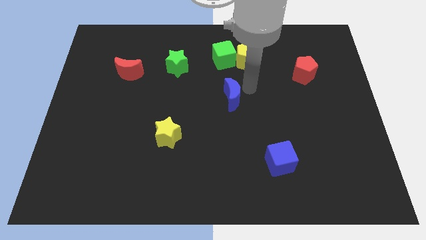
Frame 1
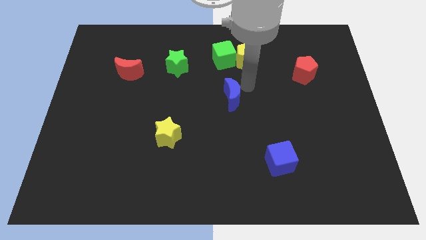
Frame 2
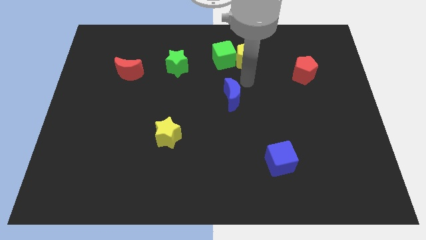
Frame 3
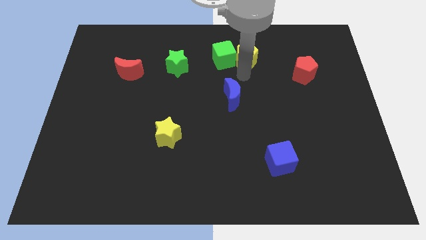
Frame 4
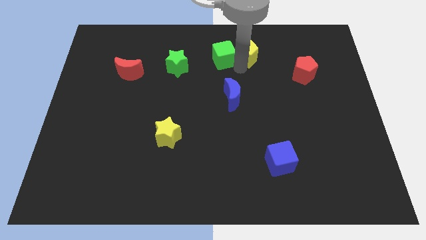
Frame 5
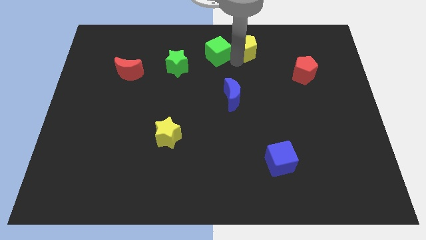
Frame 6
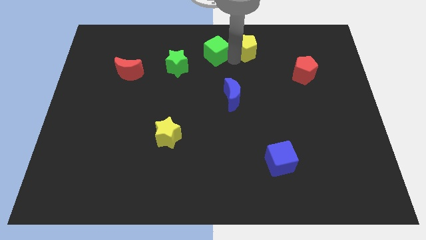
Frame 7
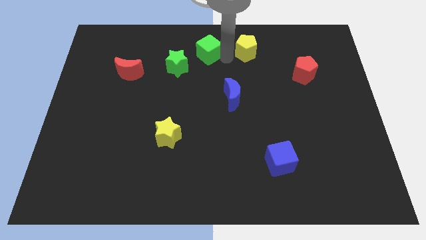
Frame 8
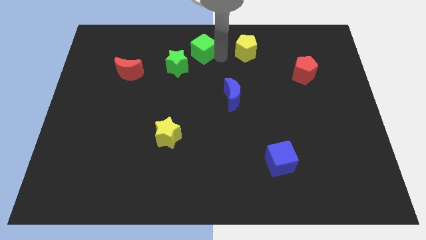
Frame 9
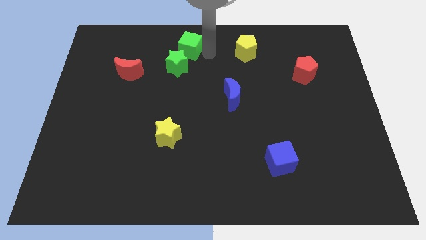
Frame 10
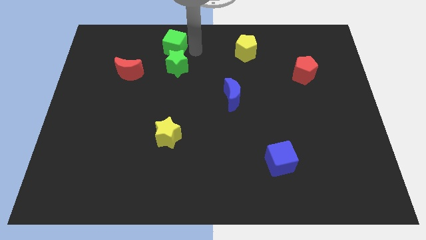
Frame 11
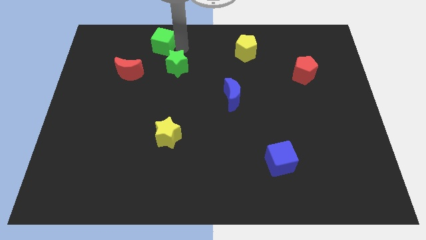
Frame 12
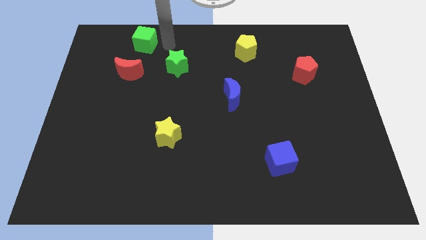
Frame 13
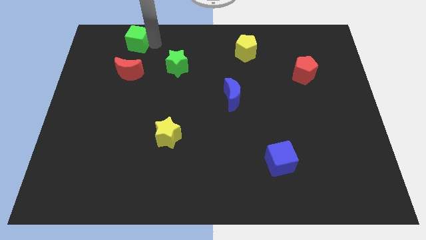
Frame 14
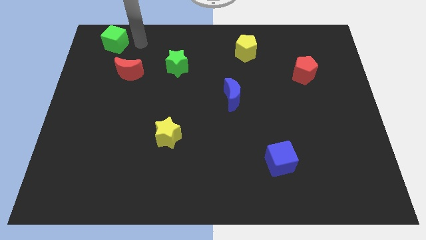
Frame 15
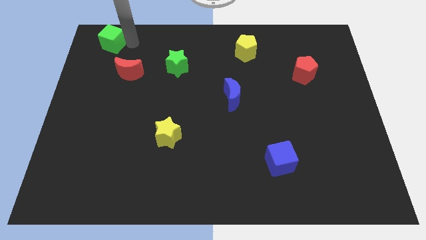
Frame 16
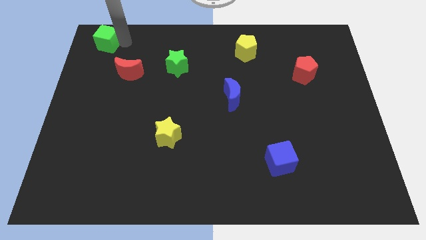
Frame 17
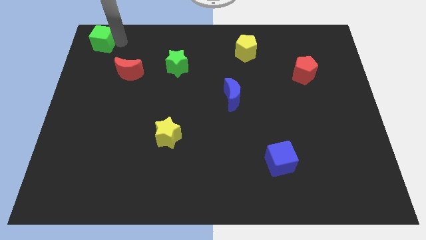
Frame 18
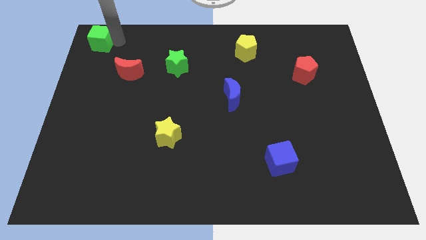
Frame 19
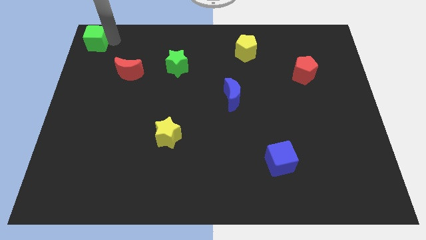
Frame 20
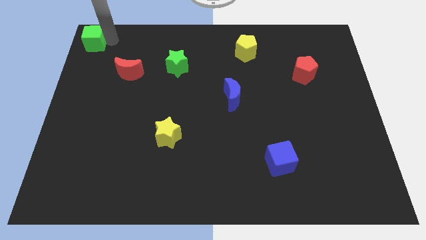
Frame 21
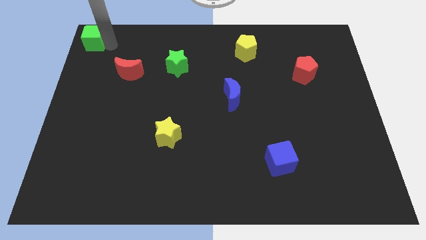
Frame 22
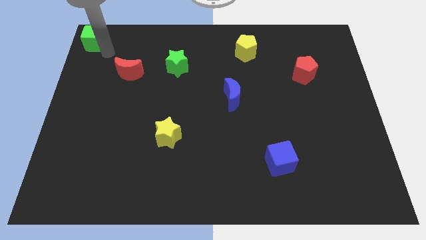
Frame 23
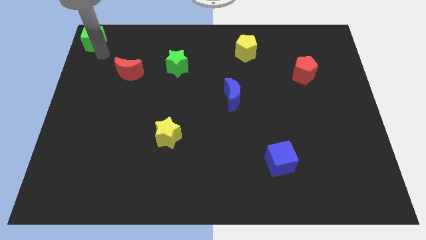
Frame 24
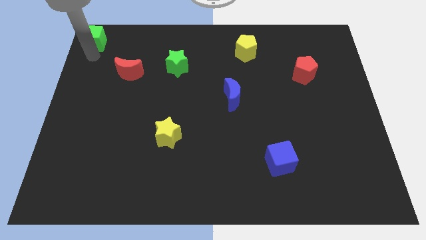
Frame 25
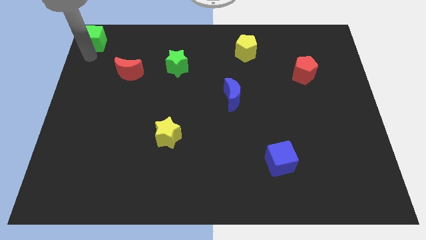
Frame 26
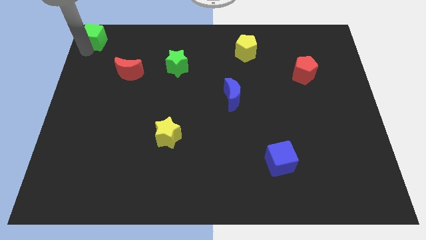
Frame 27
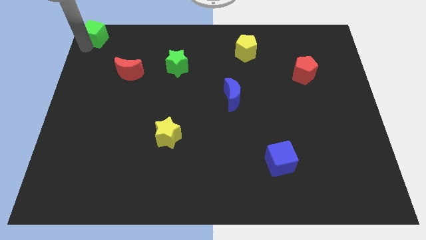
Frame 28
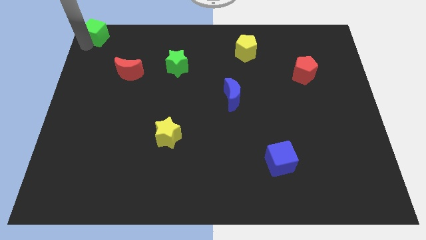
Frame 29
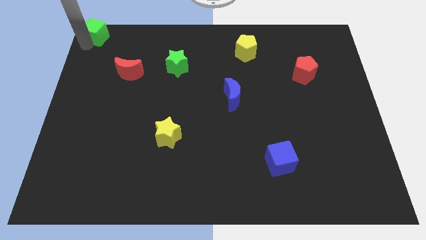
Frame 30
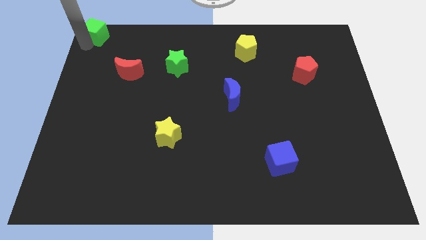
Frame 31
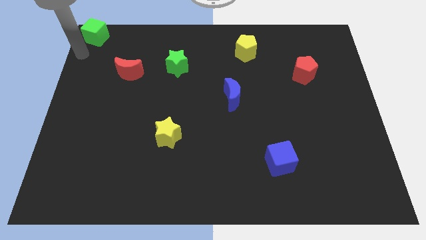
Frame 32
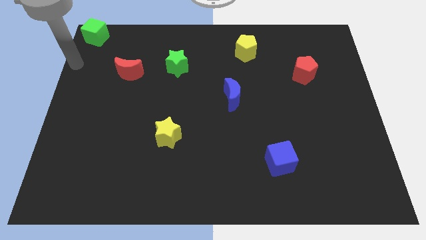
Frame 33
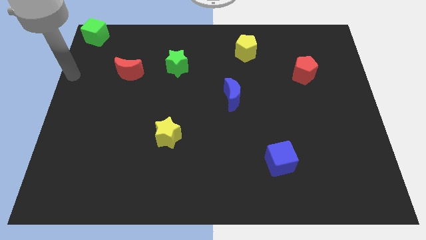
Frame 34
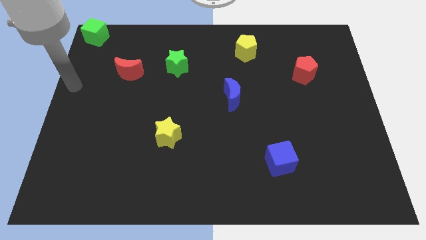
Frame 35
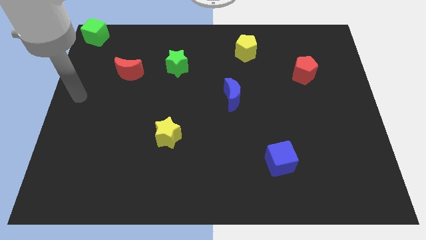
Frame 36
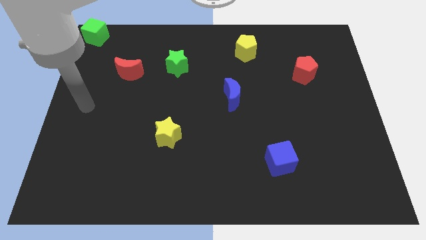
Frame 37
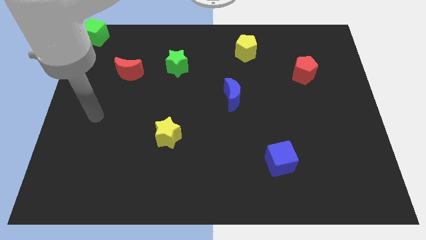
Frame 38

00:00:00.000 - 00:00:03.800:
move green cube to the top left corner

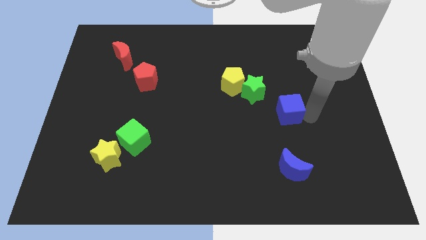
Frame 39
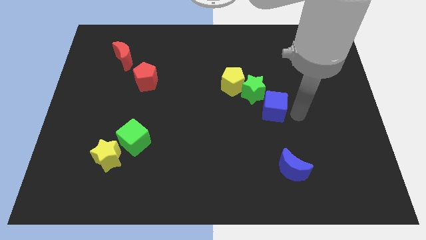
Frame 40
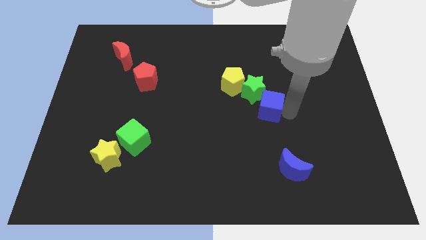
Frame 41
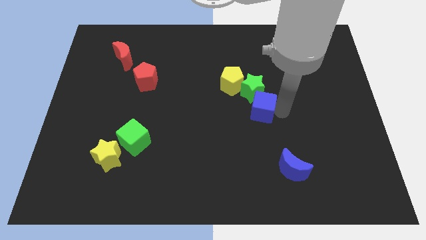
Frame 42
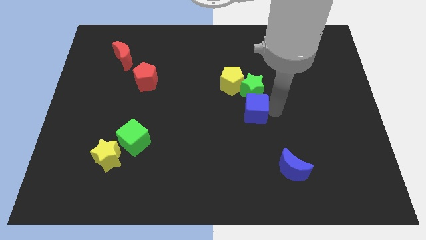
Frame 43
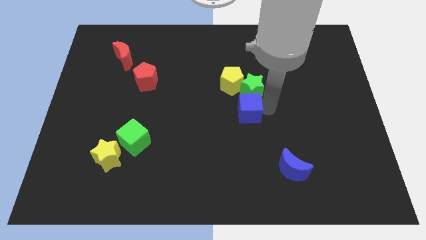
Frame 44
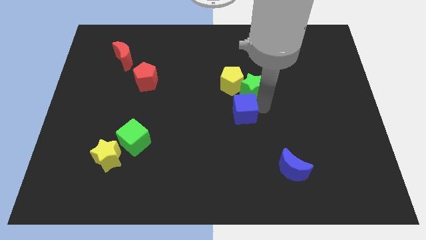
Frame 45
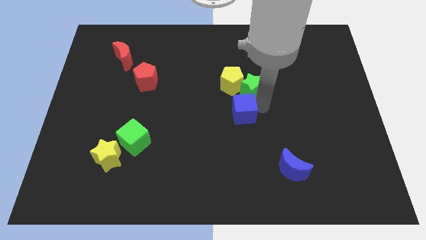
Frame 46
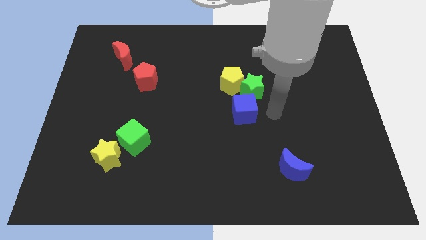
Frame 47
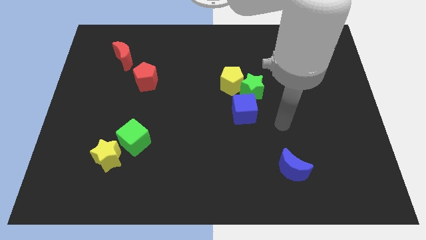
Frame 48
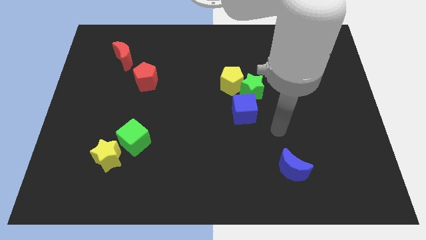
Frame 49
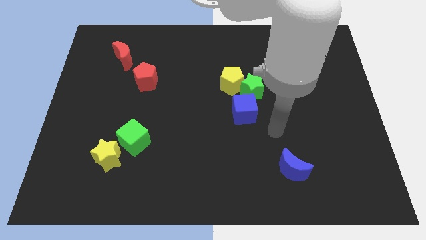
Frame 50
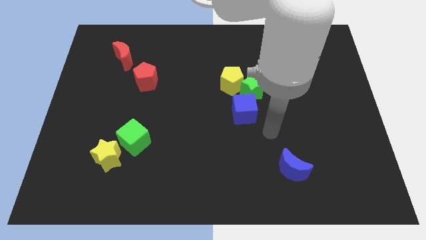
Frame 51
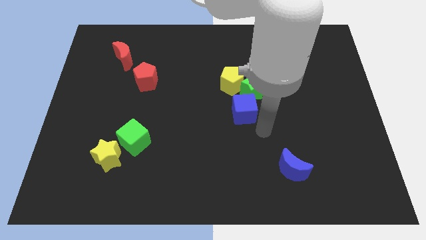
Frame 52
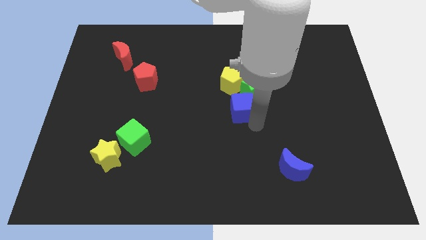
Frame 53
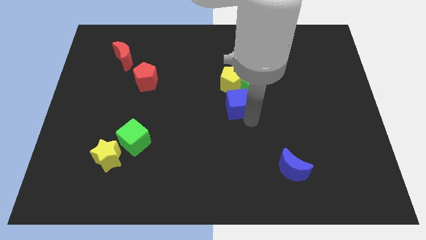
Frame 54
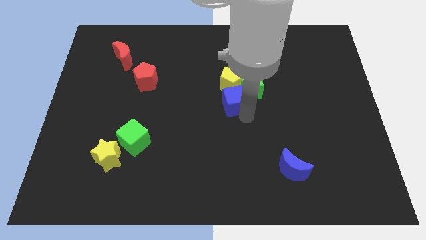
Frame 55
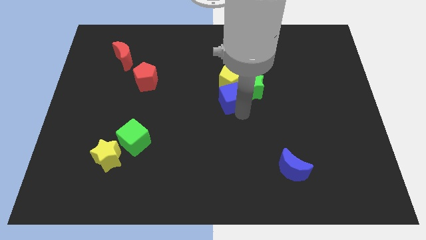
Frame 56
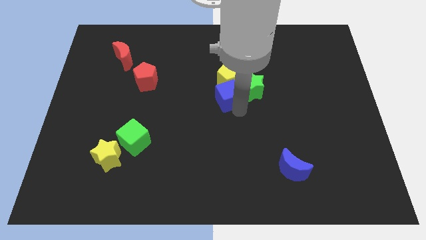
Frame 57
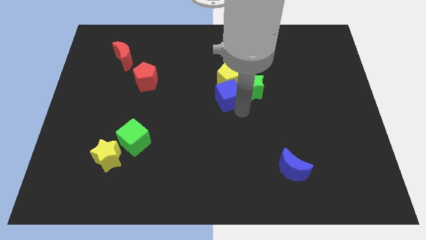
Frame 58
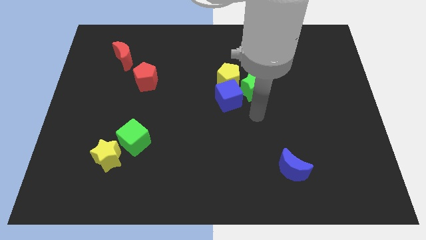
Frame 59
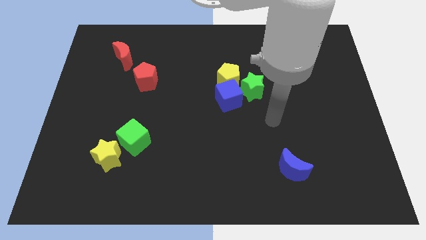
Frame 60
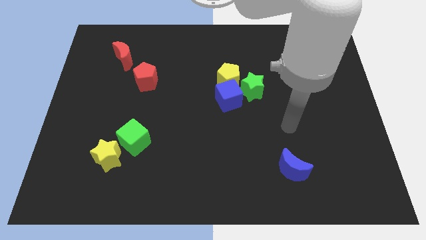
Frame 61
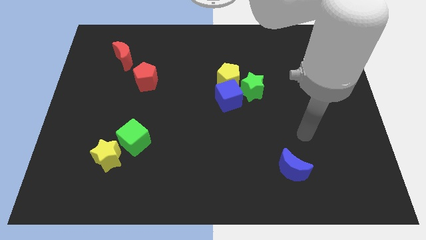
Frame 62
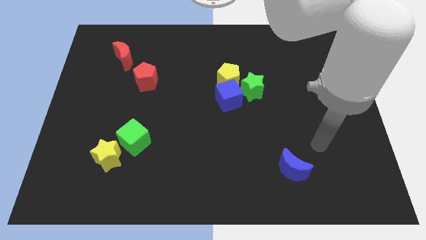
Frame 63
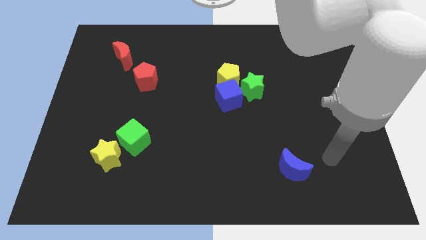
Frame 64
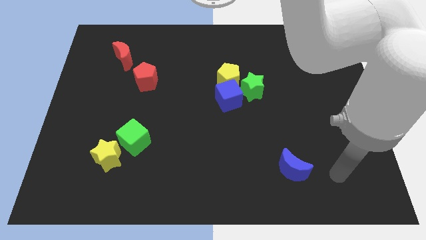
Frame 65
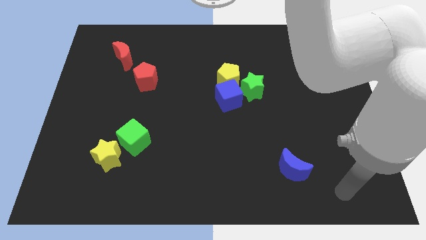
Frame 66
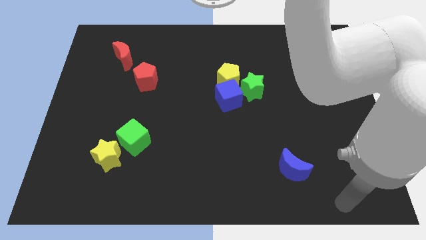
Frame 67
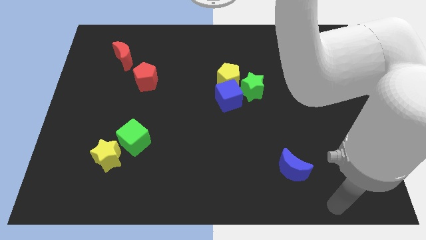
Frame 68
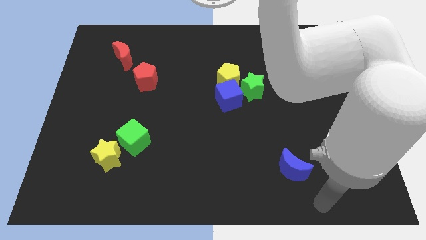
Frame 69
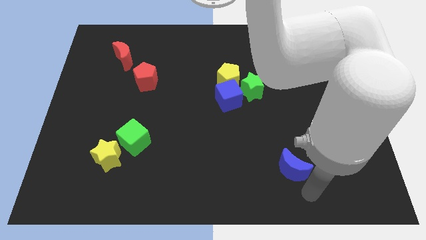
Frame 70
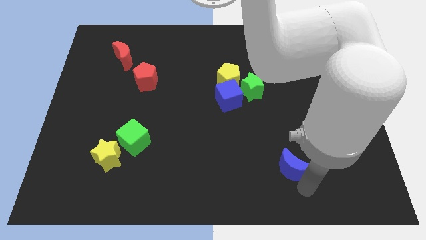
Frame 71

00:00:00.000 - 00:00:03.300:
move the blue cube into the yellow pentagon

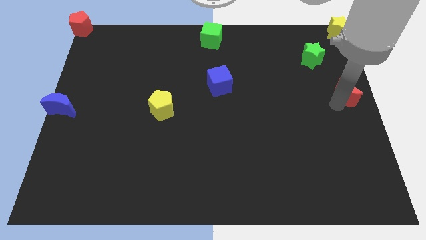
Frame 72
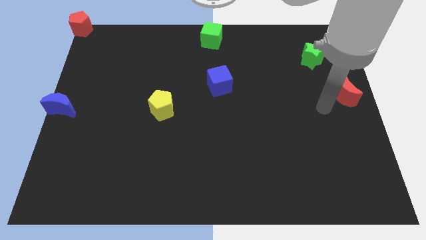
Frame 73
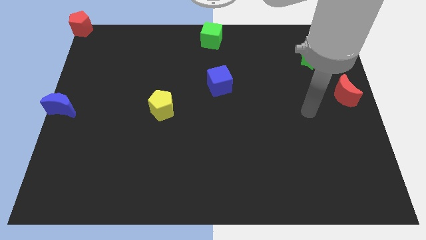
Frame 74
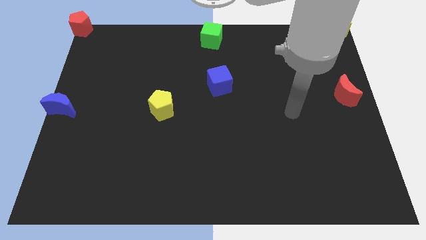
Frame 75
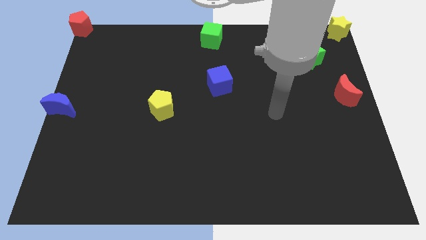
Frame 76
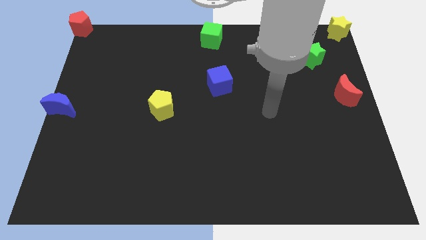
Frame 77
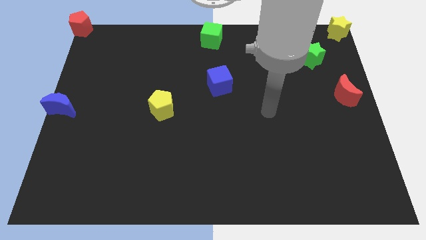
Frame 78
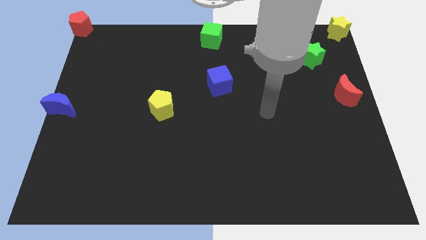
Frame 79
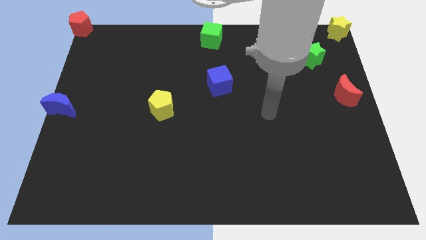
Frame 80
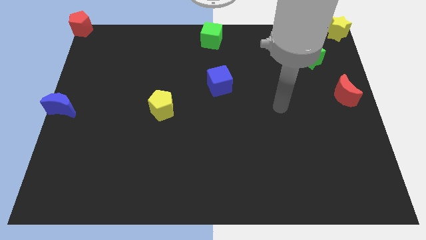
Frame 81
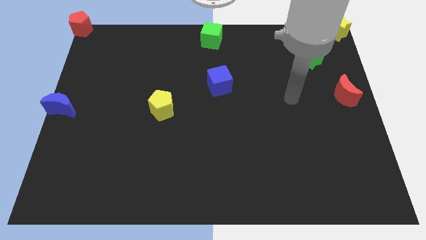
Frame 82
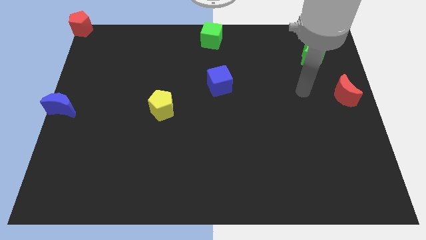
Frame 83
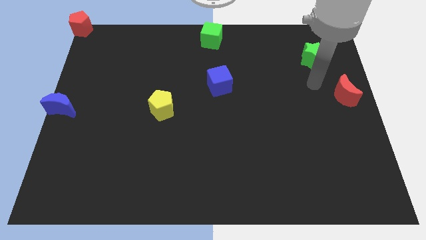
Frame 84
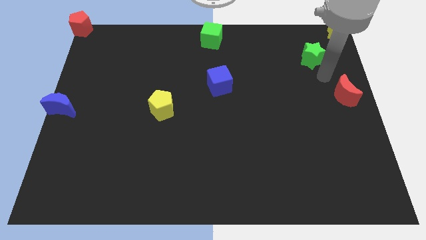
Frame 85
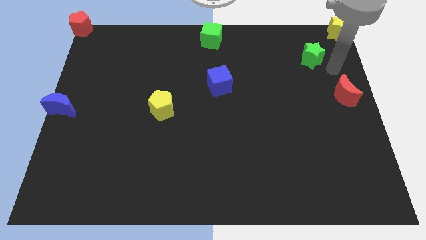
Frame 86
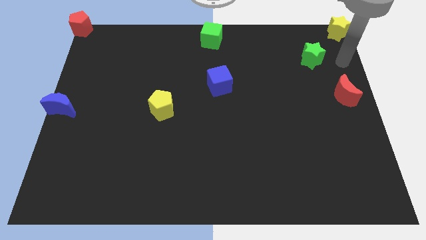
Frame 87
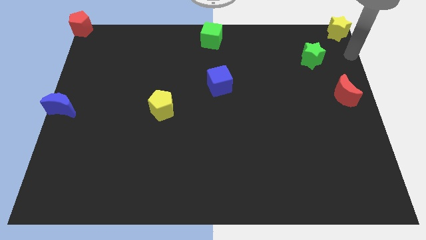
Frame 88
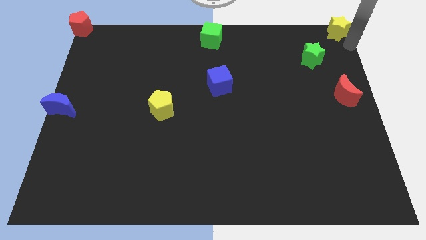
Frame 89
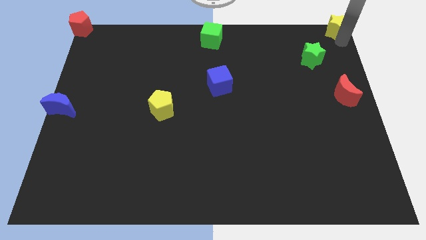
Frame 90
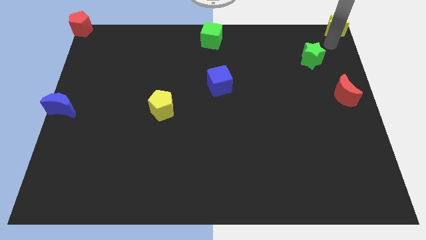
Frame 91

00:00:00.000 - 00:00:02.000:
move your arm away from the red moon
